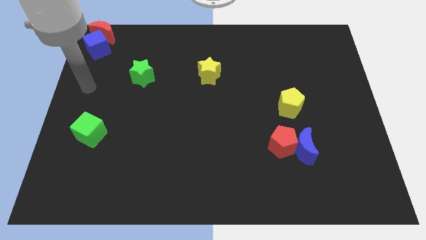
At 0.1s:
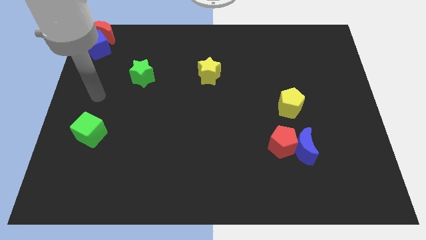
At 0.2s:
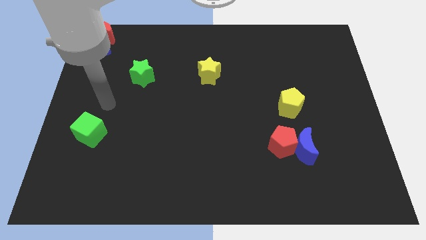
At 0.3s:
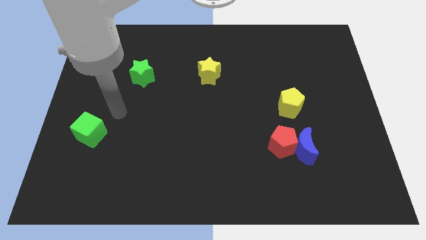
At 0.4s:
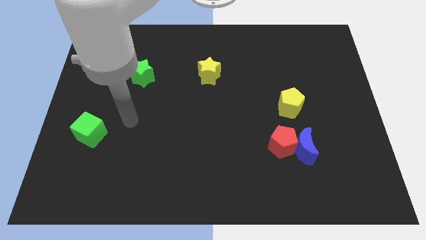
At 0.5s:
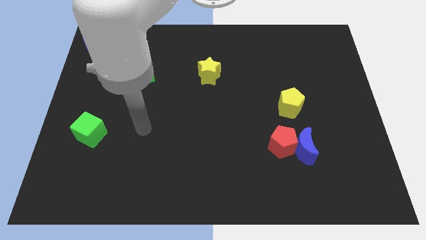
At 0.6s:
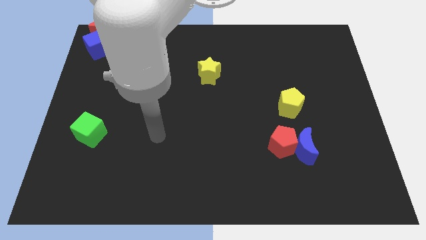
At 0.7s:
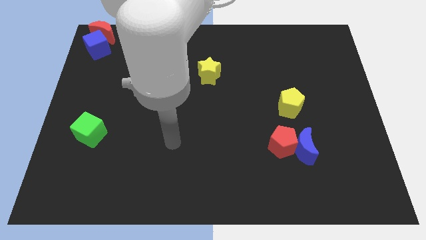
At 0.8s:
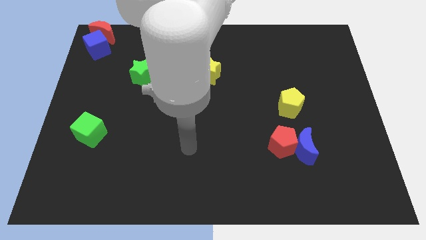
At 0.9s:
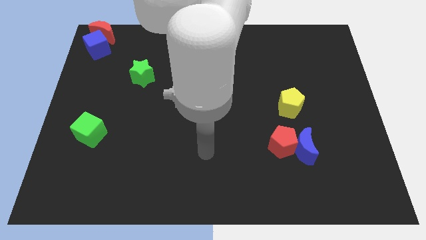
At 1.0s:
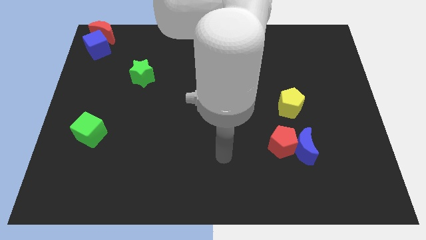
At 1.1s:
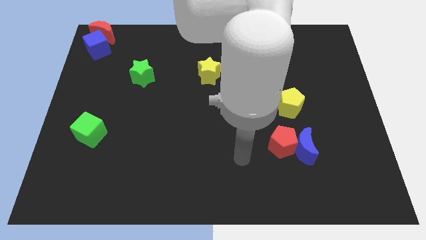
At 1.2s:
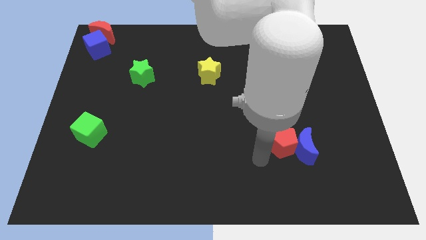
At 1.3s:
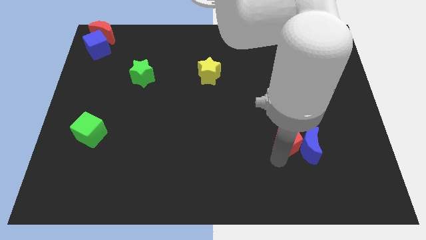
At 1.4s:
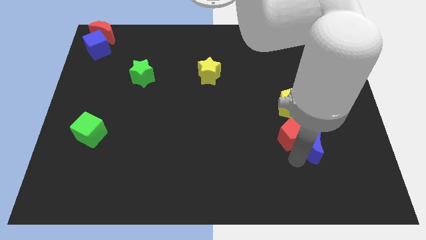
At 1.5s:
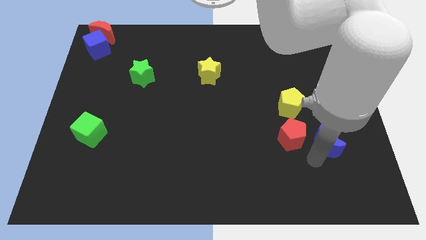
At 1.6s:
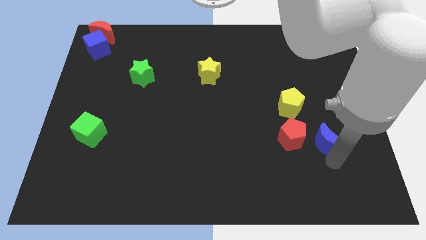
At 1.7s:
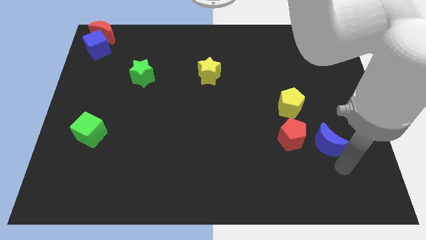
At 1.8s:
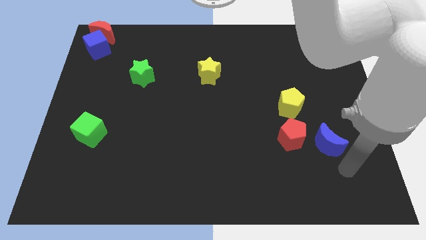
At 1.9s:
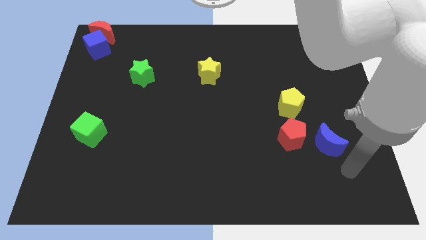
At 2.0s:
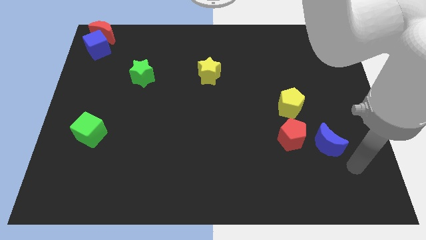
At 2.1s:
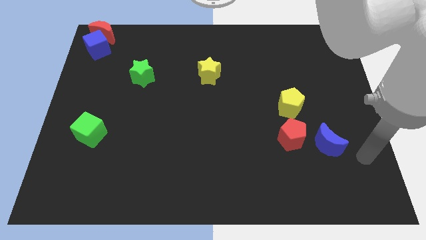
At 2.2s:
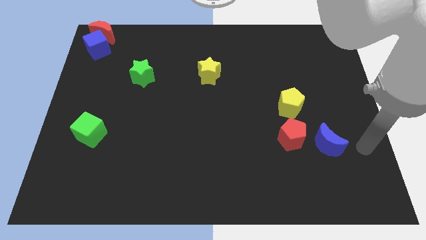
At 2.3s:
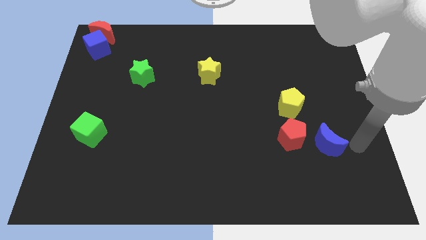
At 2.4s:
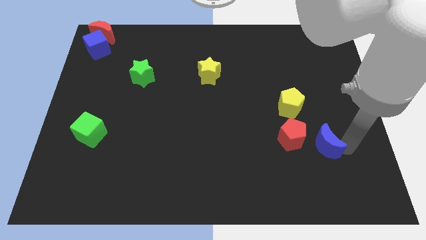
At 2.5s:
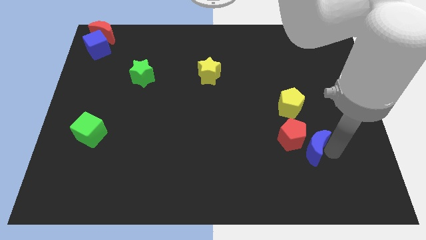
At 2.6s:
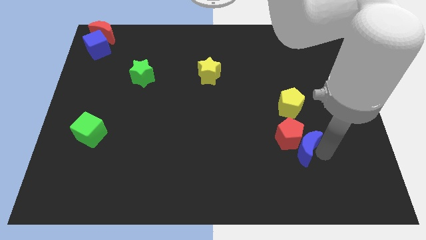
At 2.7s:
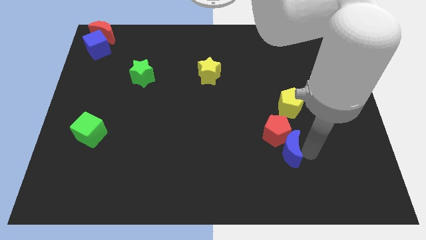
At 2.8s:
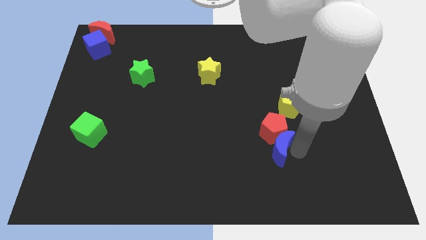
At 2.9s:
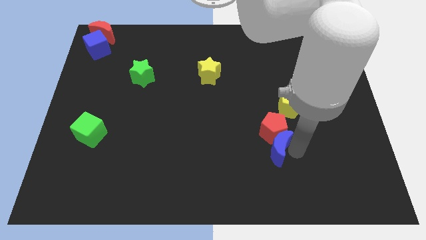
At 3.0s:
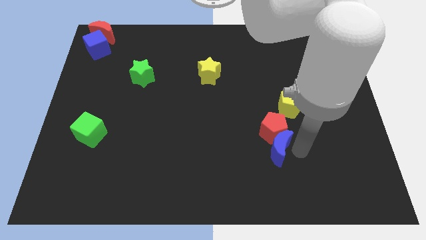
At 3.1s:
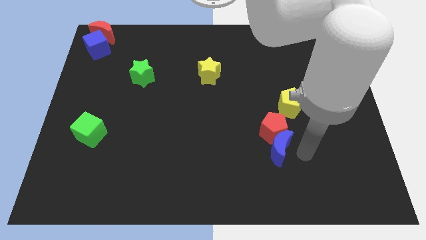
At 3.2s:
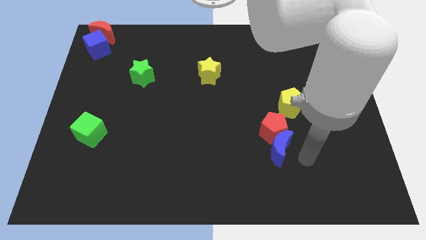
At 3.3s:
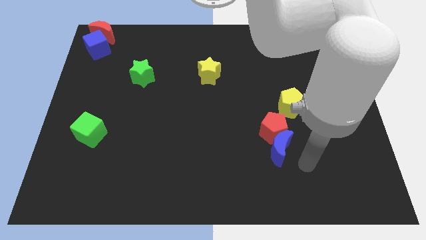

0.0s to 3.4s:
move the red pentagon and the blue crescent slightly to the left

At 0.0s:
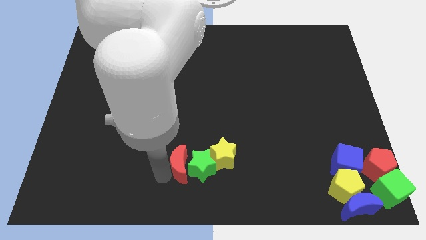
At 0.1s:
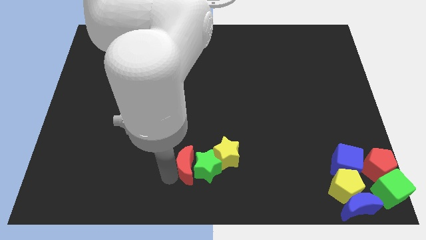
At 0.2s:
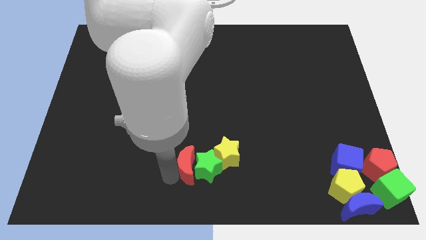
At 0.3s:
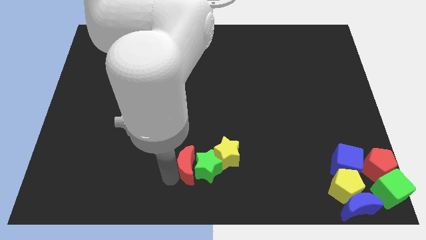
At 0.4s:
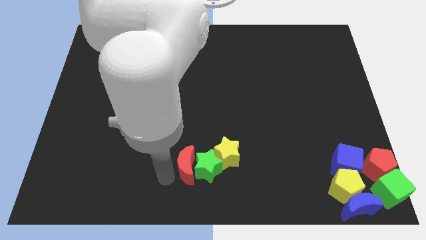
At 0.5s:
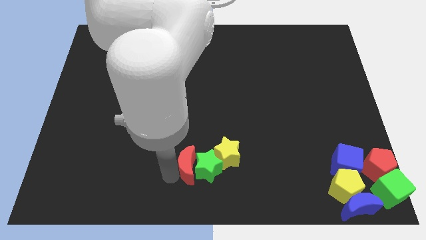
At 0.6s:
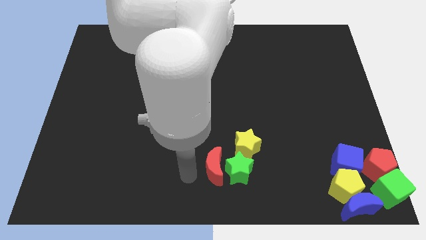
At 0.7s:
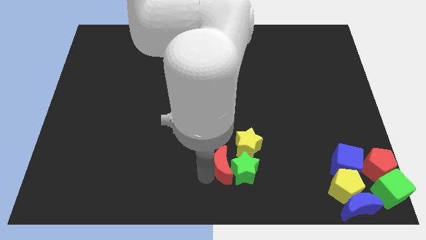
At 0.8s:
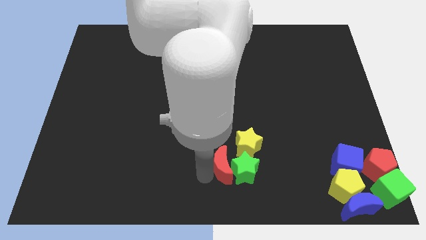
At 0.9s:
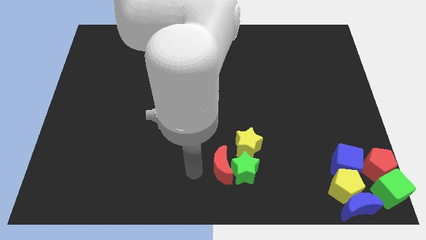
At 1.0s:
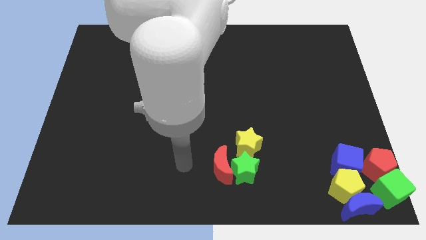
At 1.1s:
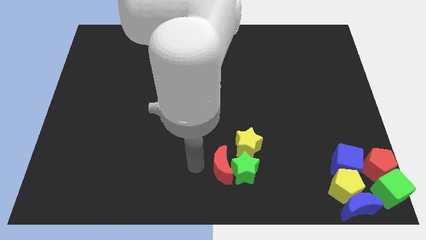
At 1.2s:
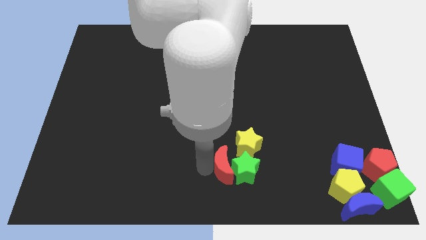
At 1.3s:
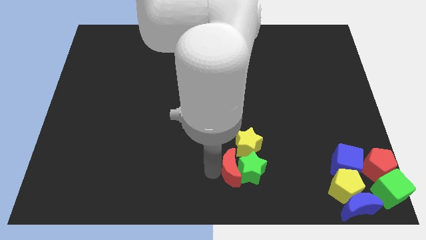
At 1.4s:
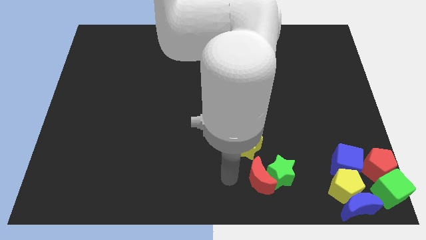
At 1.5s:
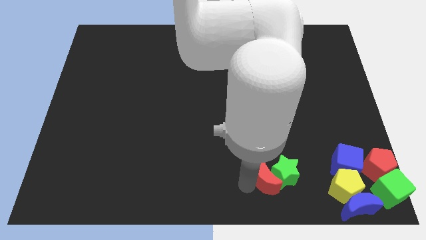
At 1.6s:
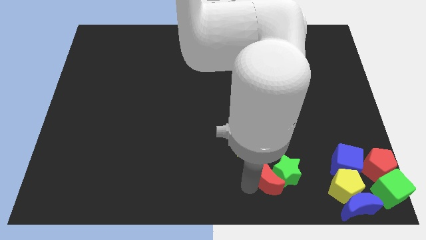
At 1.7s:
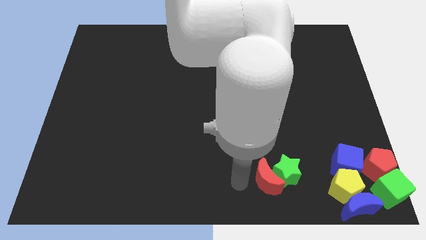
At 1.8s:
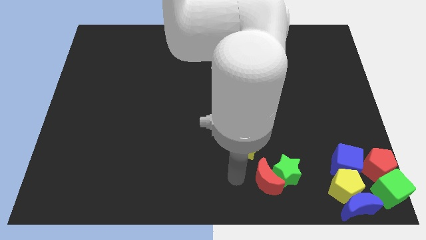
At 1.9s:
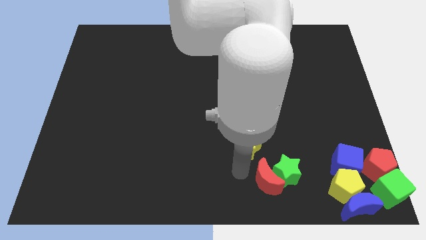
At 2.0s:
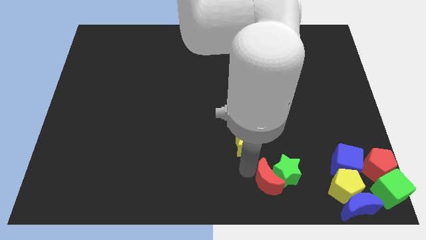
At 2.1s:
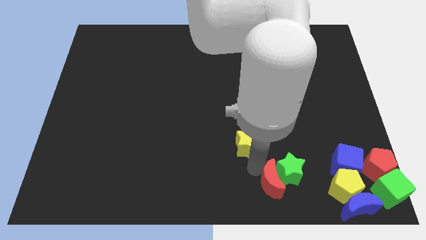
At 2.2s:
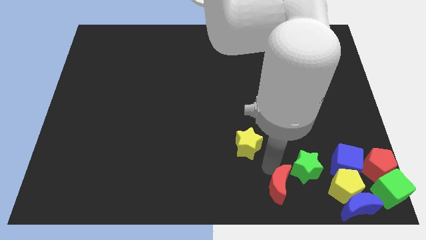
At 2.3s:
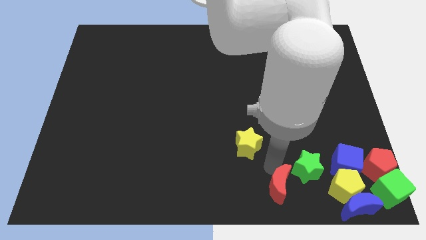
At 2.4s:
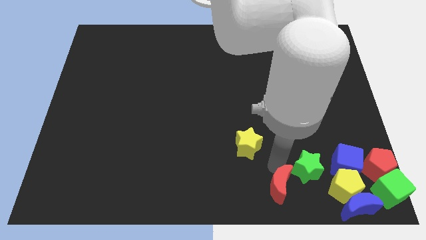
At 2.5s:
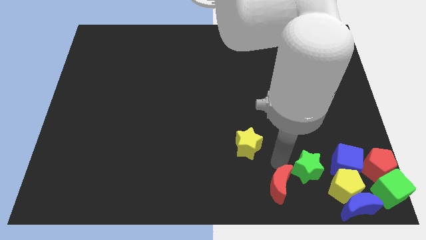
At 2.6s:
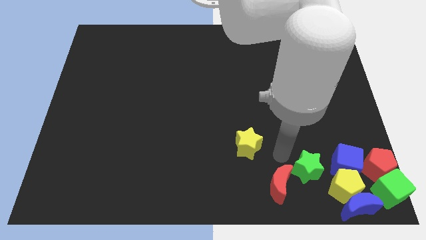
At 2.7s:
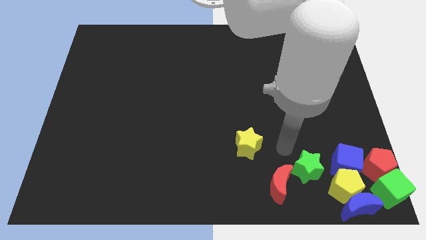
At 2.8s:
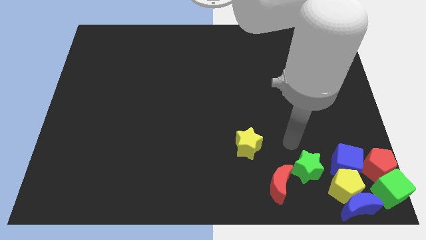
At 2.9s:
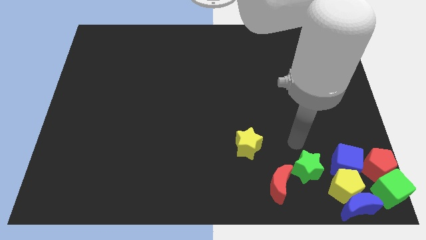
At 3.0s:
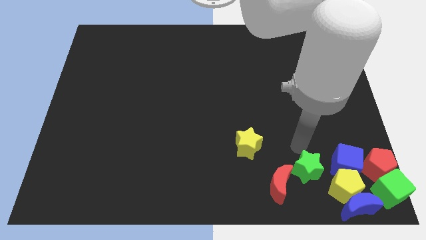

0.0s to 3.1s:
push the green star towards the left of the blue cube along with the red crescent

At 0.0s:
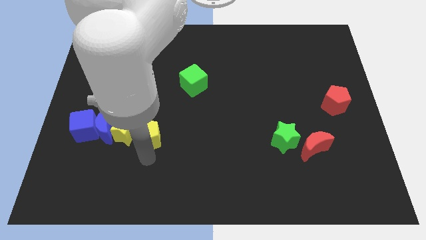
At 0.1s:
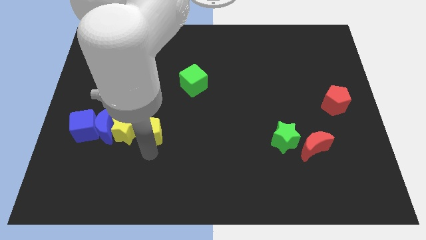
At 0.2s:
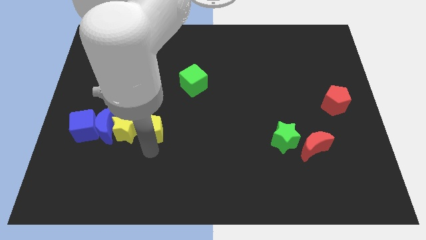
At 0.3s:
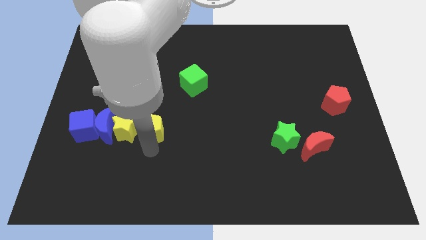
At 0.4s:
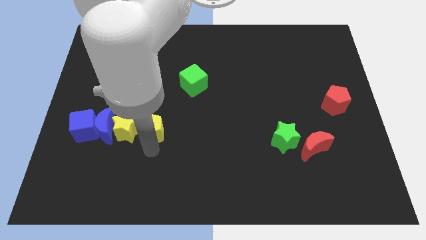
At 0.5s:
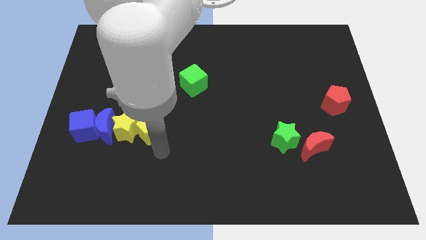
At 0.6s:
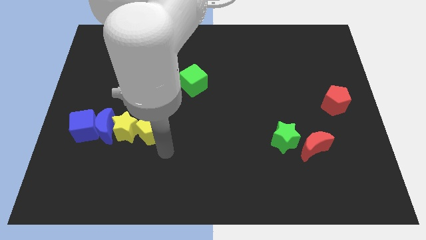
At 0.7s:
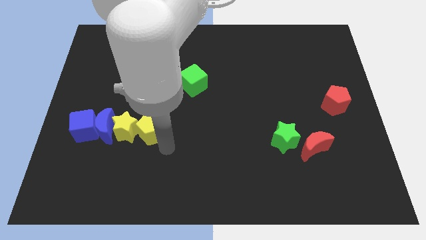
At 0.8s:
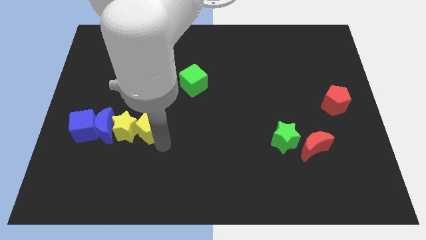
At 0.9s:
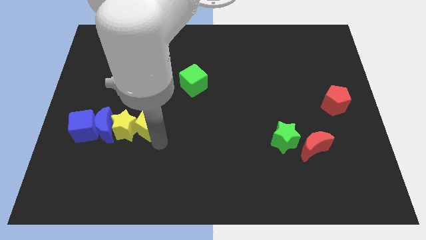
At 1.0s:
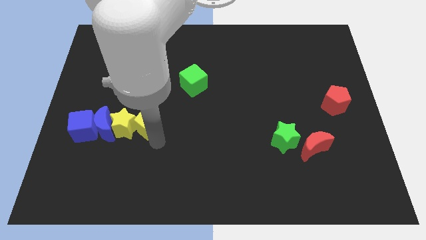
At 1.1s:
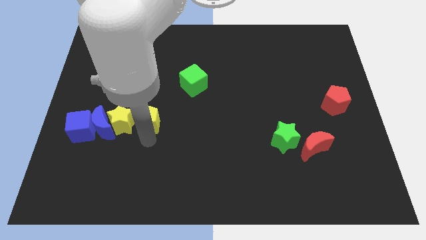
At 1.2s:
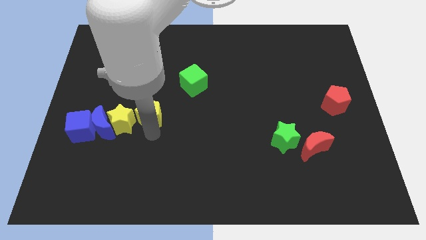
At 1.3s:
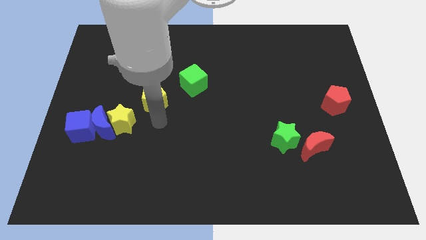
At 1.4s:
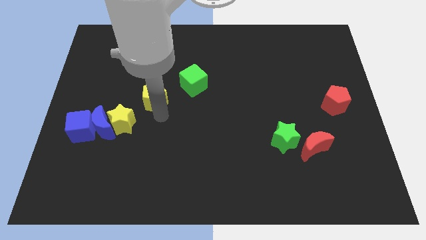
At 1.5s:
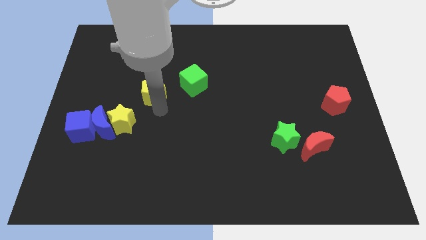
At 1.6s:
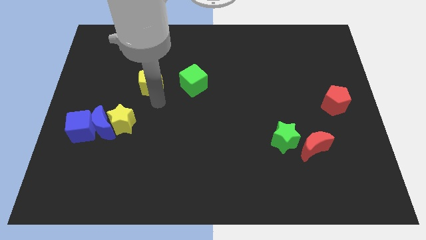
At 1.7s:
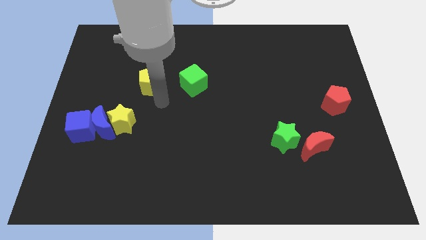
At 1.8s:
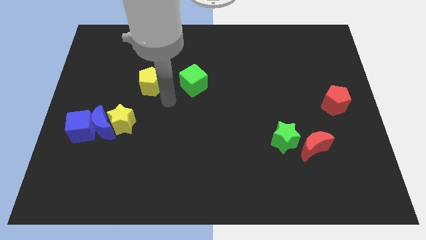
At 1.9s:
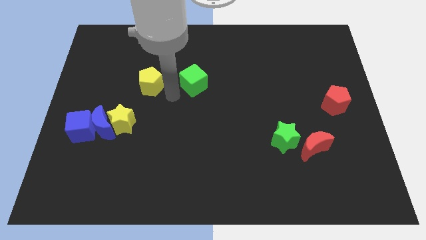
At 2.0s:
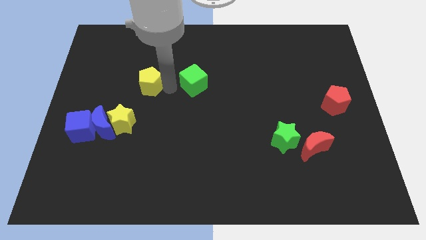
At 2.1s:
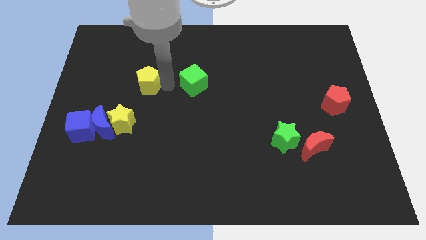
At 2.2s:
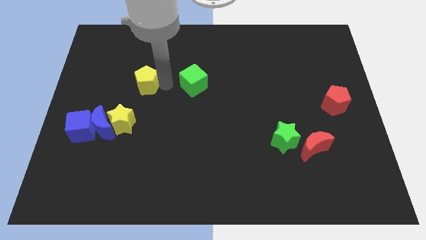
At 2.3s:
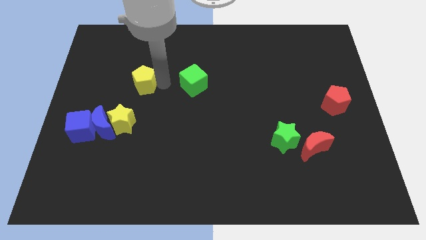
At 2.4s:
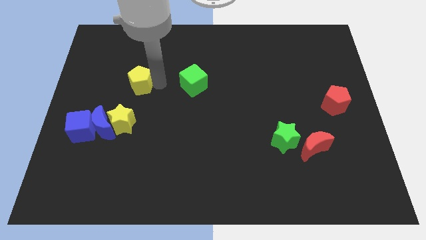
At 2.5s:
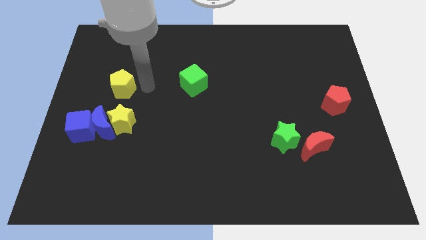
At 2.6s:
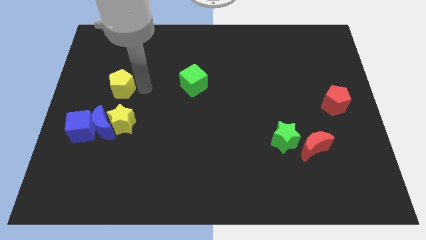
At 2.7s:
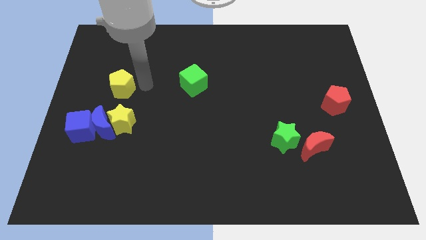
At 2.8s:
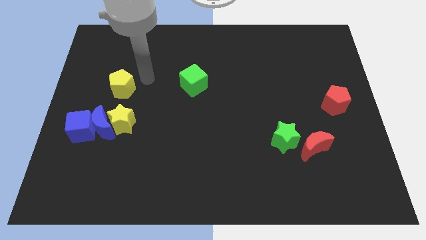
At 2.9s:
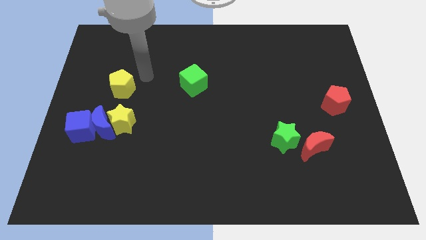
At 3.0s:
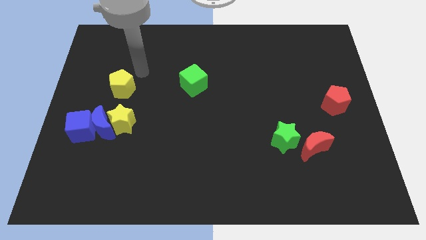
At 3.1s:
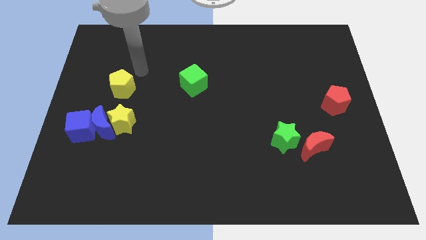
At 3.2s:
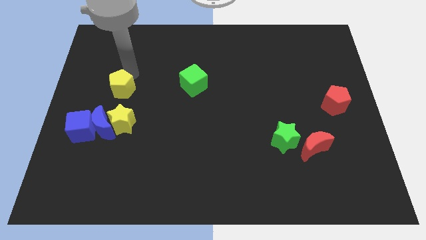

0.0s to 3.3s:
place the yellow pentagon above the yellow star
